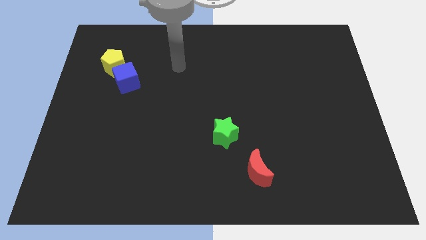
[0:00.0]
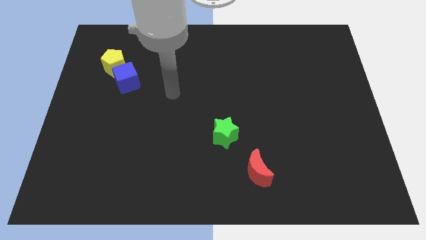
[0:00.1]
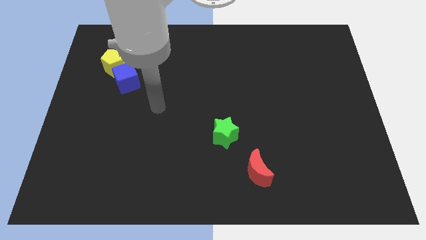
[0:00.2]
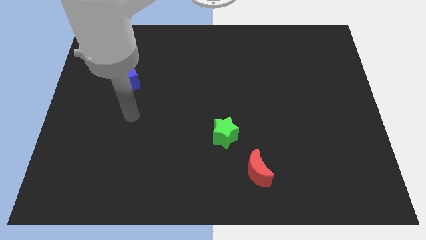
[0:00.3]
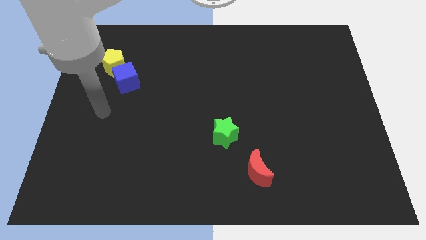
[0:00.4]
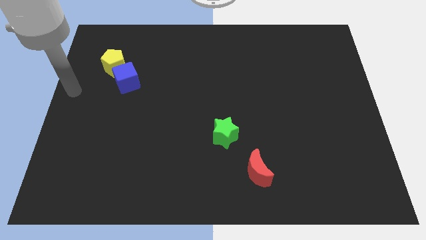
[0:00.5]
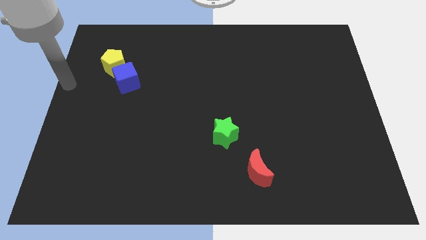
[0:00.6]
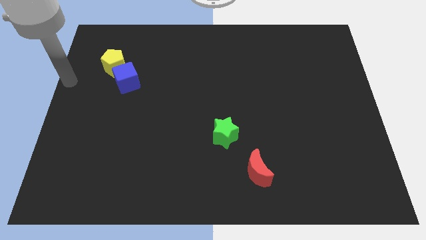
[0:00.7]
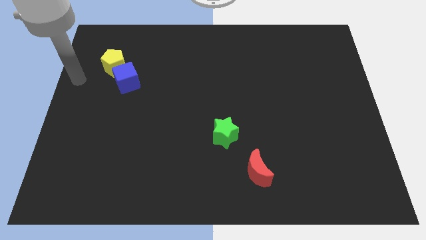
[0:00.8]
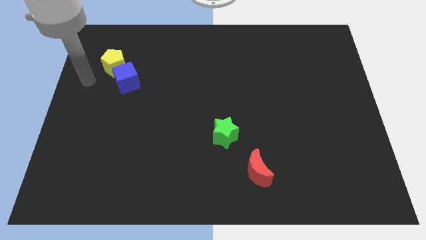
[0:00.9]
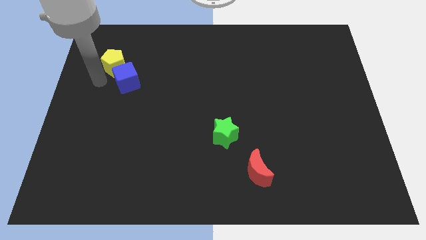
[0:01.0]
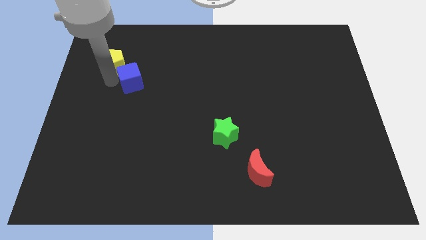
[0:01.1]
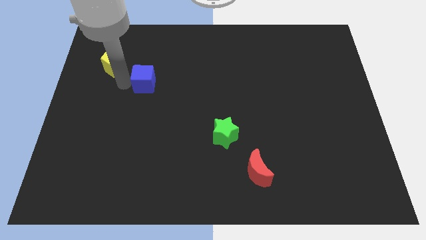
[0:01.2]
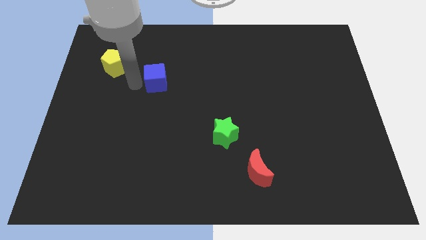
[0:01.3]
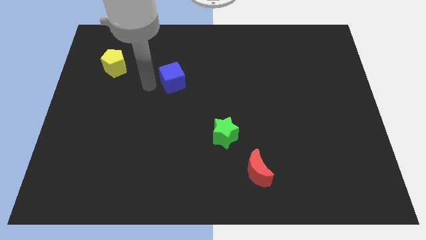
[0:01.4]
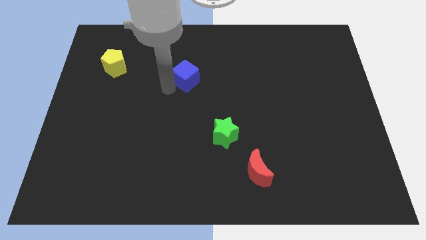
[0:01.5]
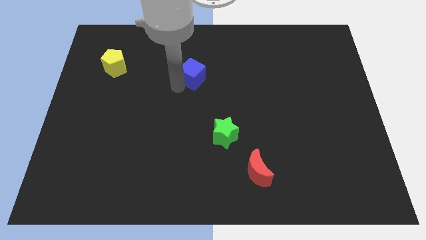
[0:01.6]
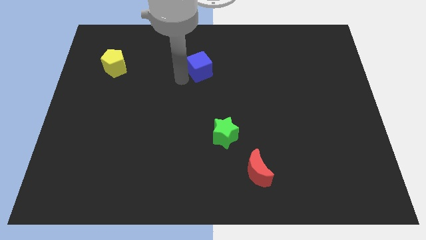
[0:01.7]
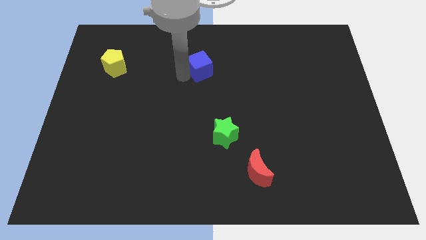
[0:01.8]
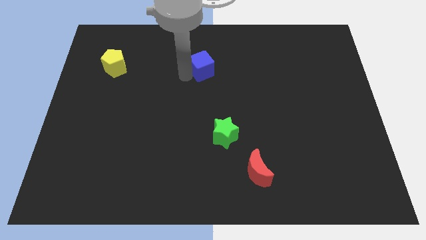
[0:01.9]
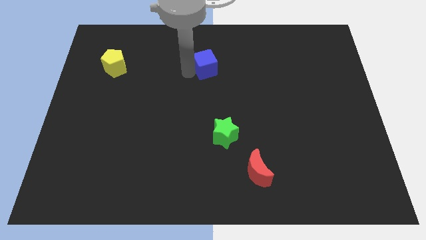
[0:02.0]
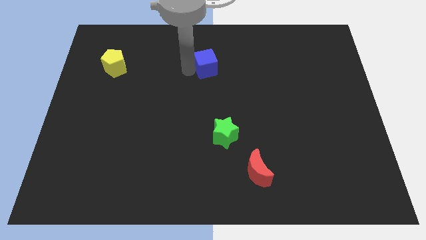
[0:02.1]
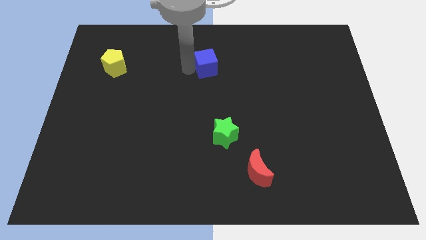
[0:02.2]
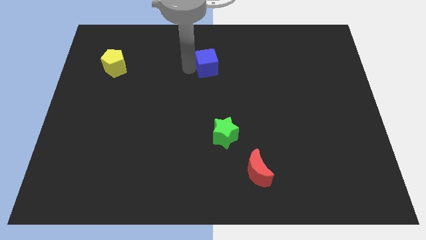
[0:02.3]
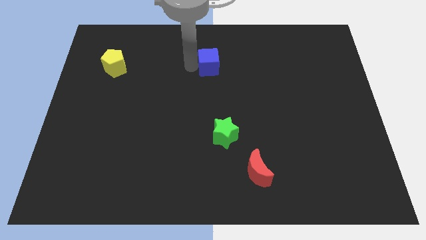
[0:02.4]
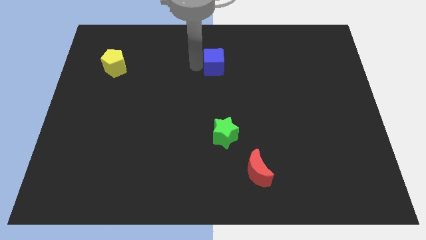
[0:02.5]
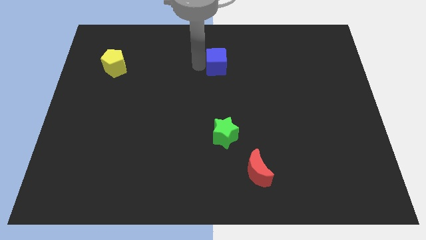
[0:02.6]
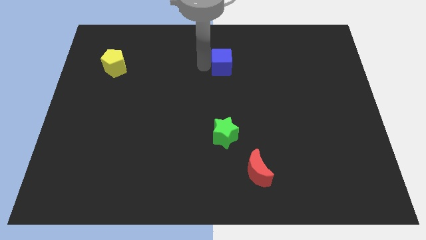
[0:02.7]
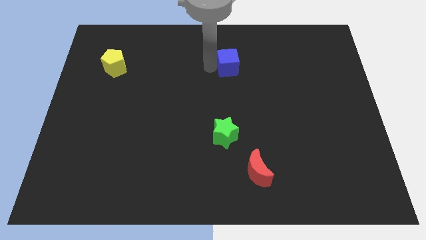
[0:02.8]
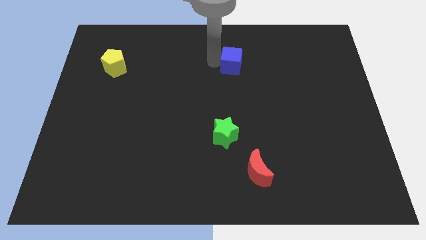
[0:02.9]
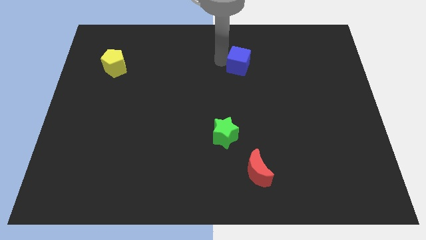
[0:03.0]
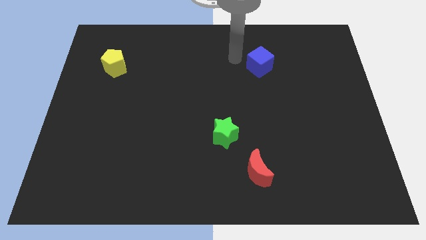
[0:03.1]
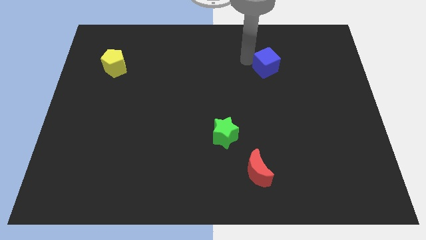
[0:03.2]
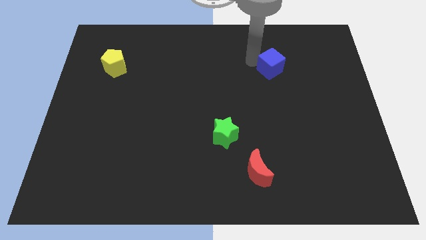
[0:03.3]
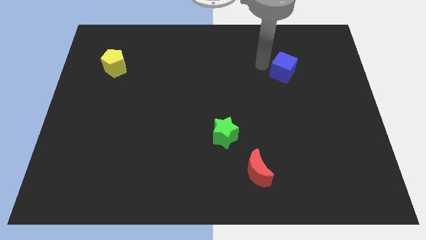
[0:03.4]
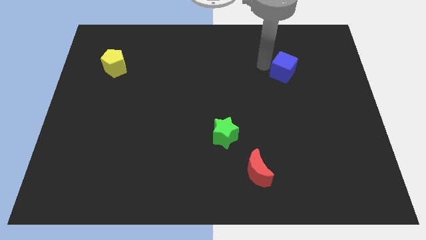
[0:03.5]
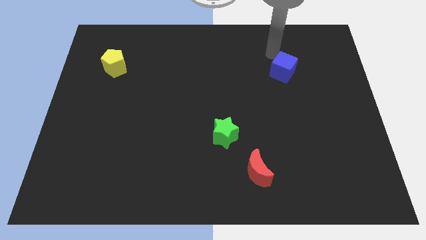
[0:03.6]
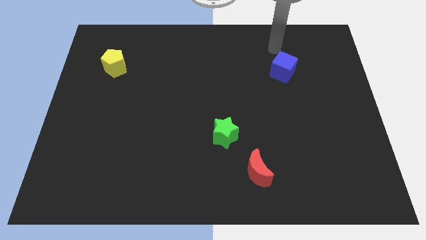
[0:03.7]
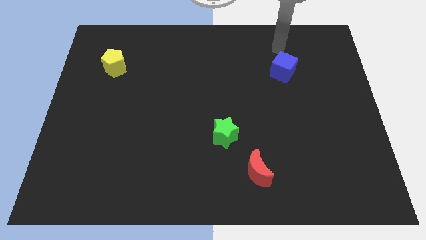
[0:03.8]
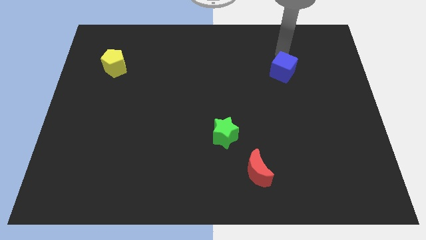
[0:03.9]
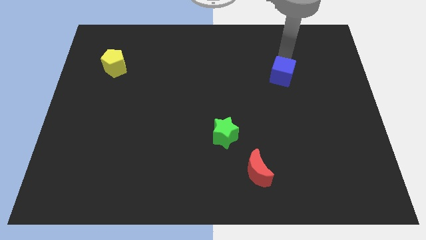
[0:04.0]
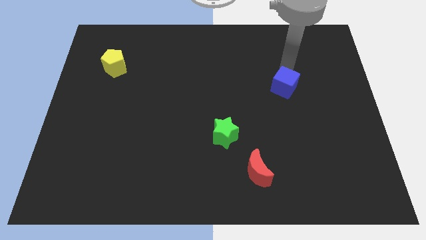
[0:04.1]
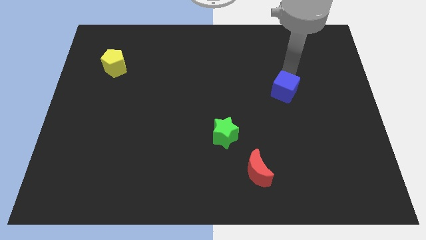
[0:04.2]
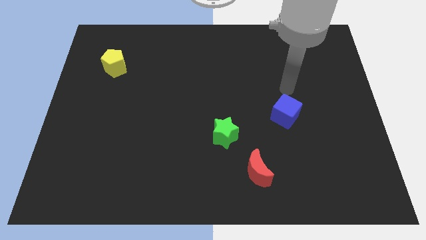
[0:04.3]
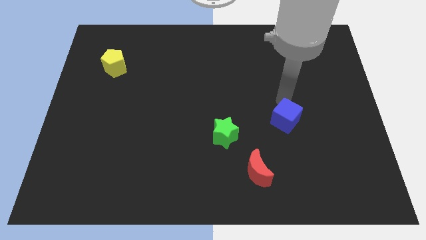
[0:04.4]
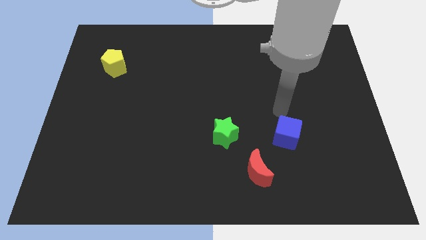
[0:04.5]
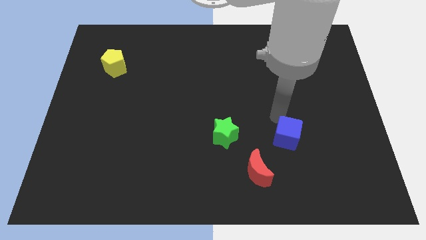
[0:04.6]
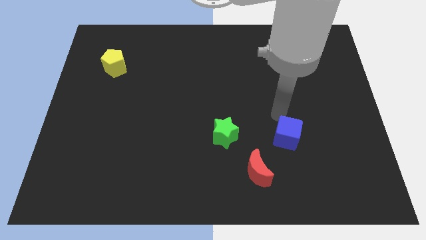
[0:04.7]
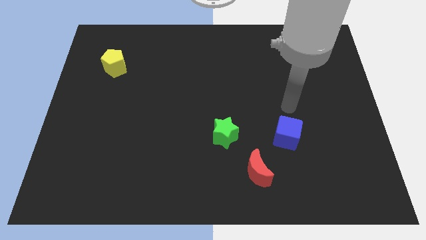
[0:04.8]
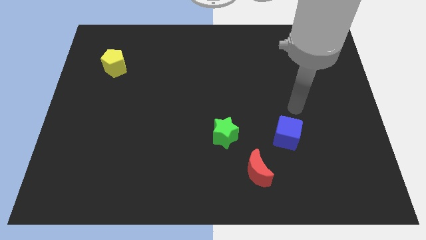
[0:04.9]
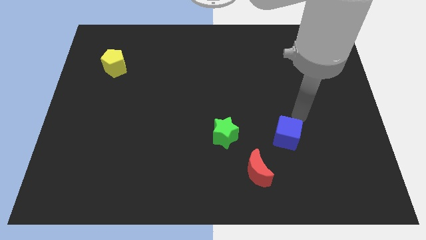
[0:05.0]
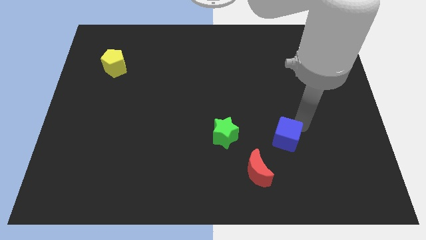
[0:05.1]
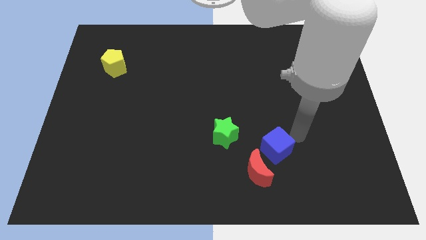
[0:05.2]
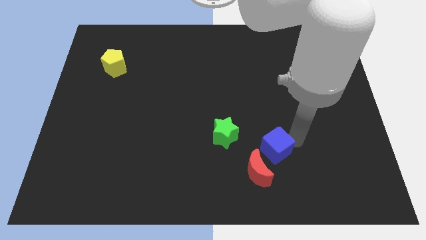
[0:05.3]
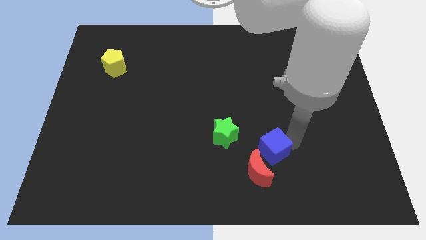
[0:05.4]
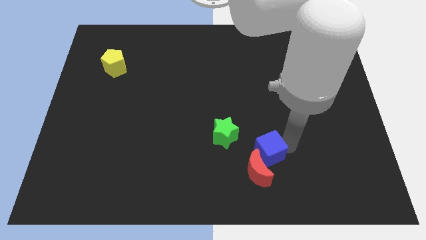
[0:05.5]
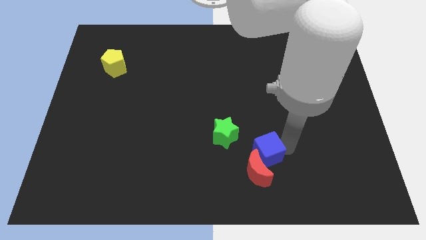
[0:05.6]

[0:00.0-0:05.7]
slide the blue cube towards the red moon

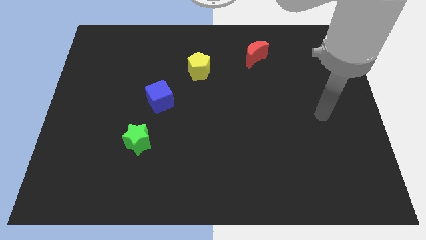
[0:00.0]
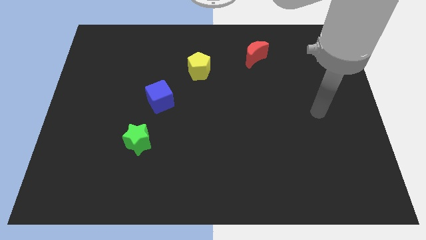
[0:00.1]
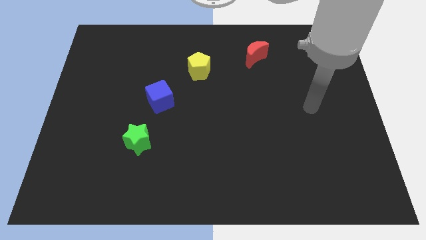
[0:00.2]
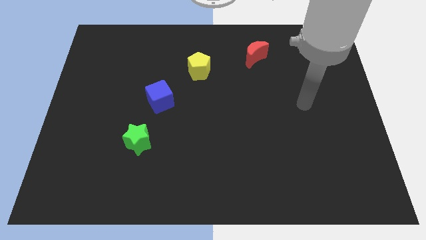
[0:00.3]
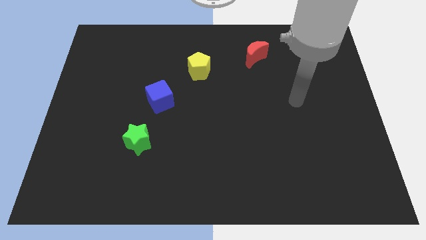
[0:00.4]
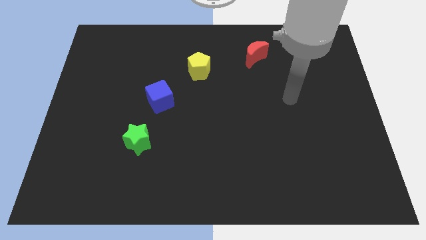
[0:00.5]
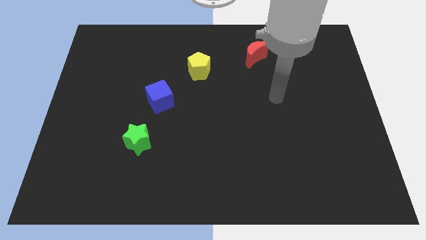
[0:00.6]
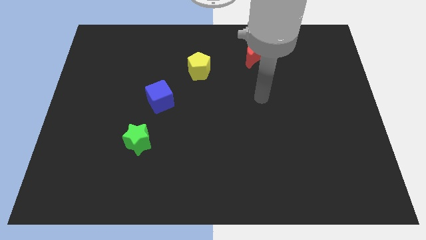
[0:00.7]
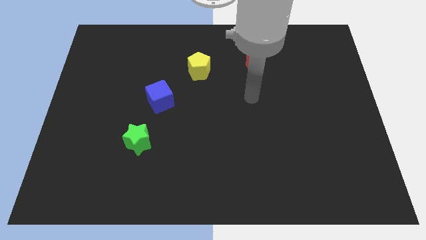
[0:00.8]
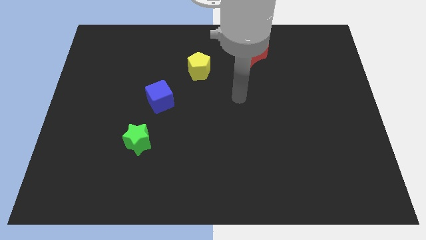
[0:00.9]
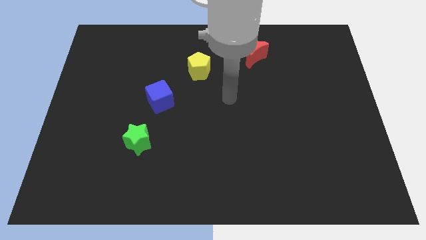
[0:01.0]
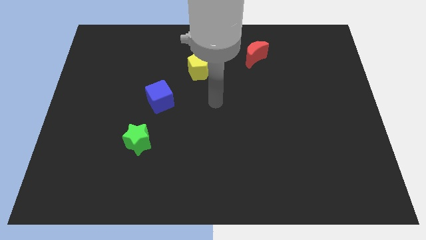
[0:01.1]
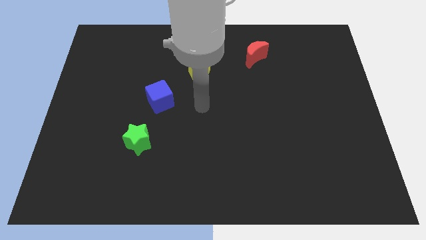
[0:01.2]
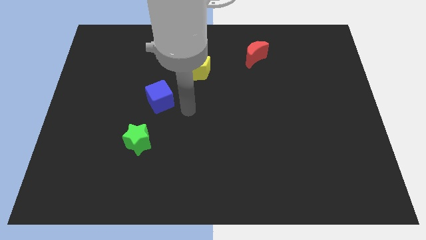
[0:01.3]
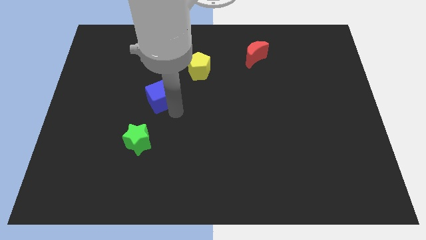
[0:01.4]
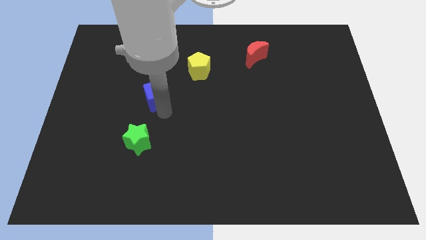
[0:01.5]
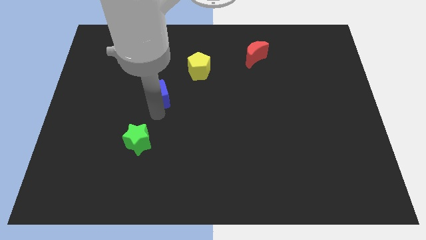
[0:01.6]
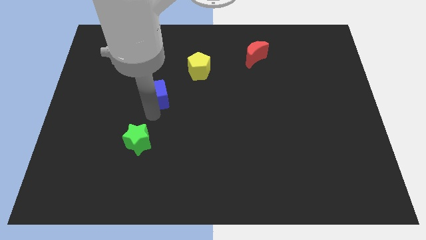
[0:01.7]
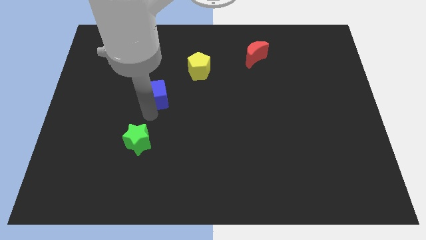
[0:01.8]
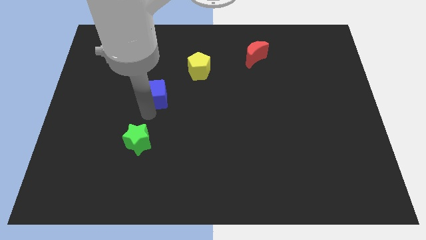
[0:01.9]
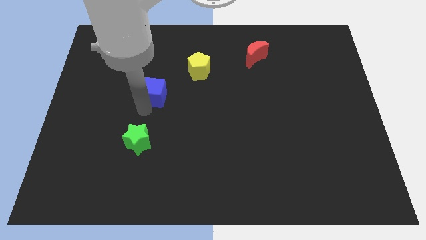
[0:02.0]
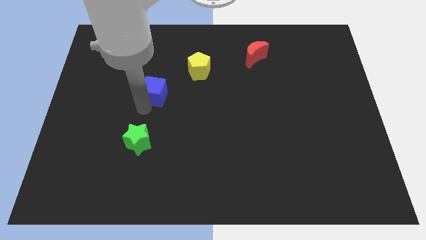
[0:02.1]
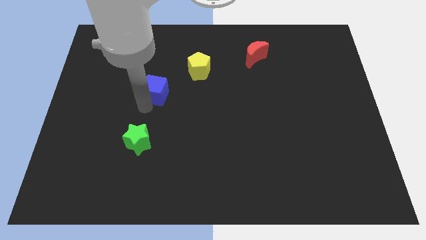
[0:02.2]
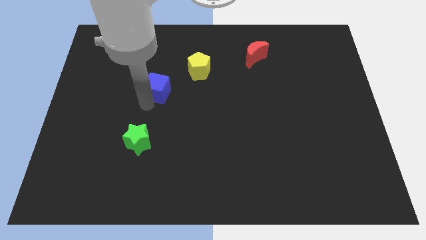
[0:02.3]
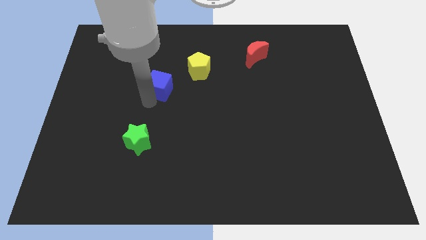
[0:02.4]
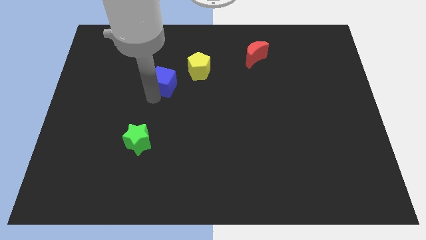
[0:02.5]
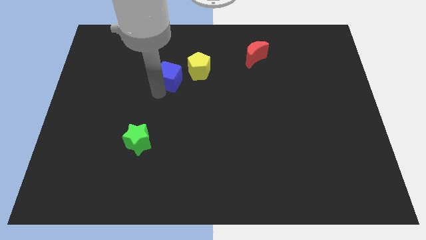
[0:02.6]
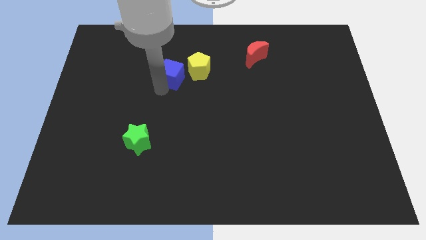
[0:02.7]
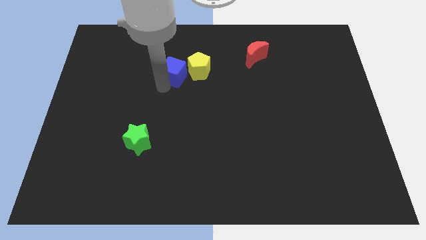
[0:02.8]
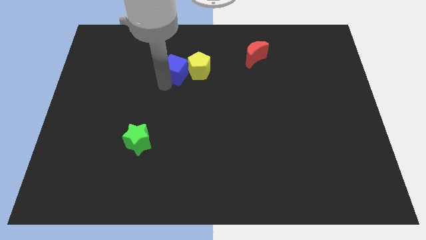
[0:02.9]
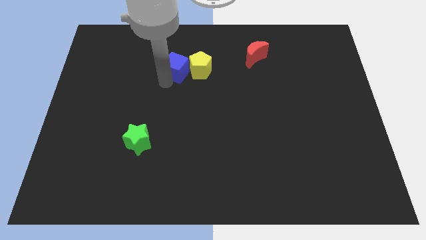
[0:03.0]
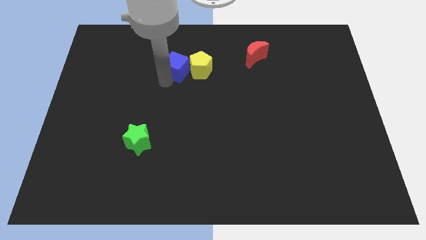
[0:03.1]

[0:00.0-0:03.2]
move the blue cube next to the pentagon
